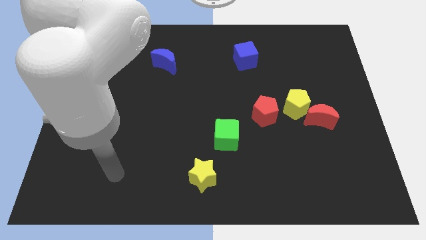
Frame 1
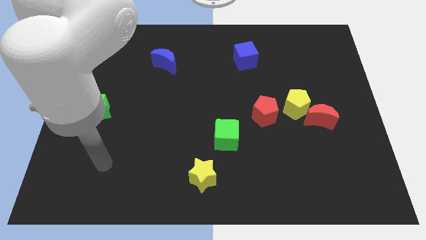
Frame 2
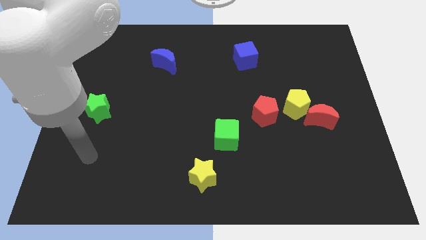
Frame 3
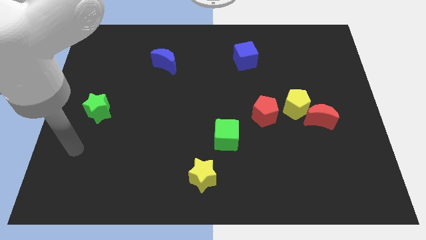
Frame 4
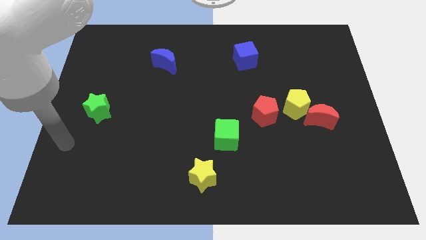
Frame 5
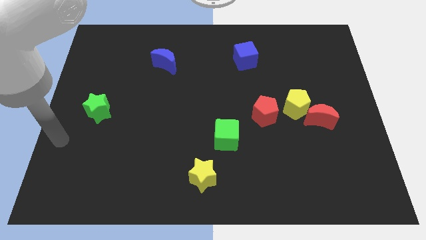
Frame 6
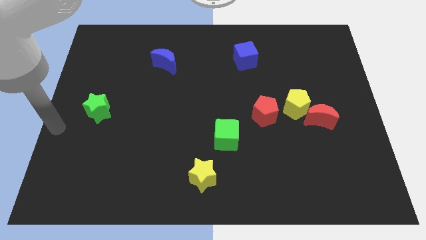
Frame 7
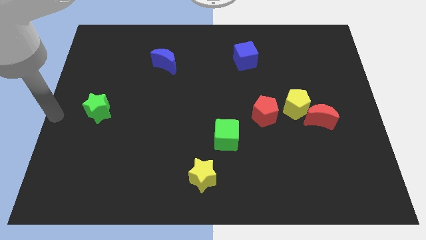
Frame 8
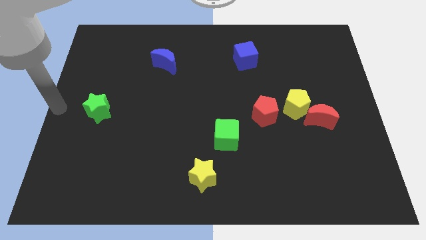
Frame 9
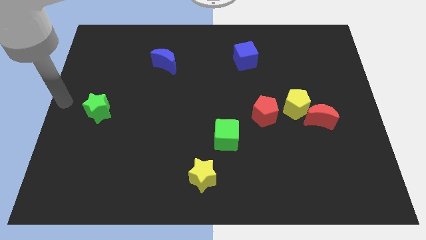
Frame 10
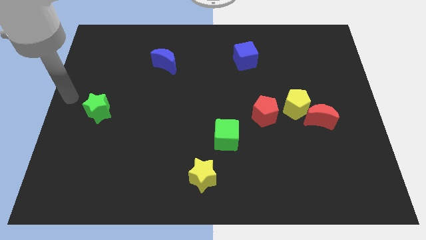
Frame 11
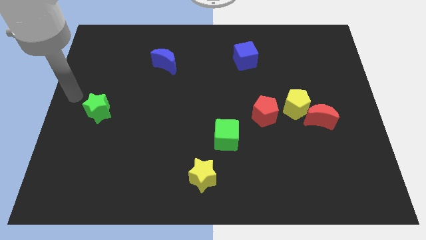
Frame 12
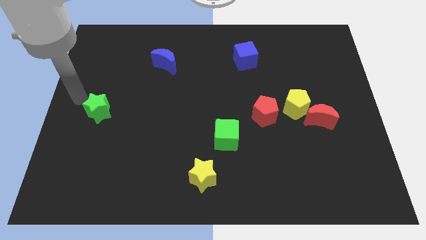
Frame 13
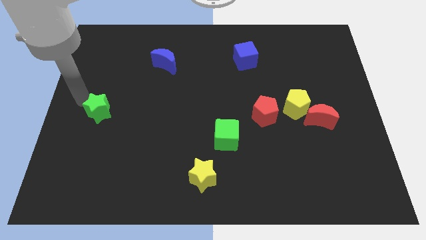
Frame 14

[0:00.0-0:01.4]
put your arm above the green star

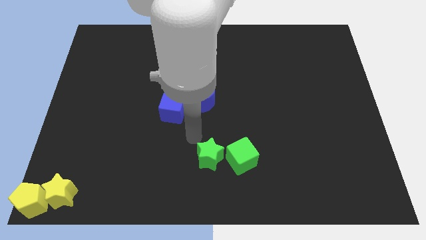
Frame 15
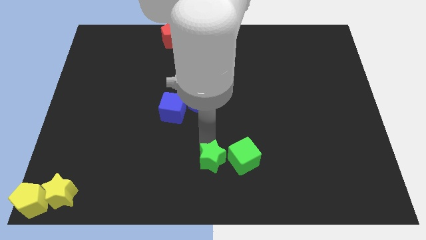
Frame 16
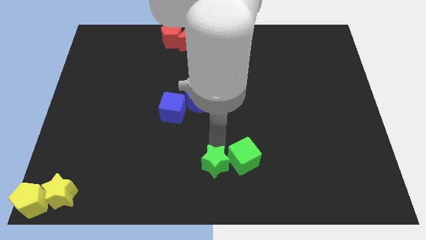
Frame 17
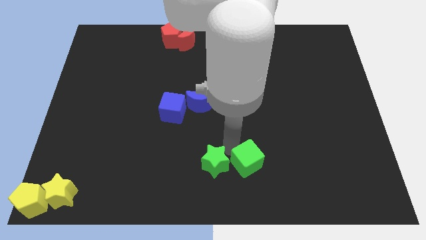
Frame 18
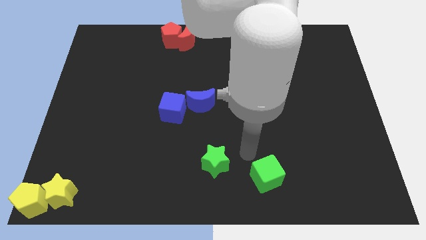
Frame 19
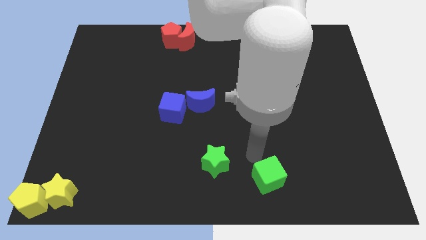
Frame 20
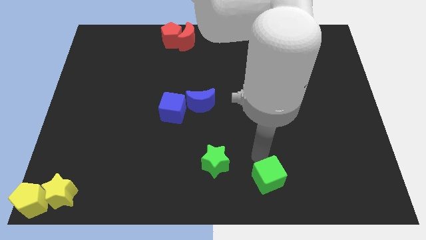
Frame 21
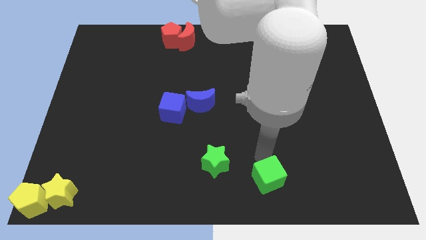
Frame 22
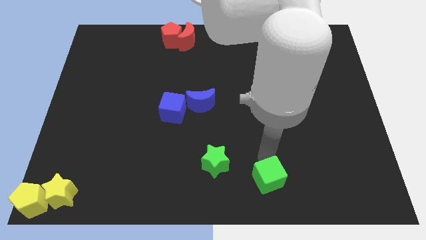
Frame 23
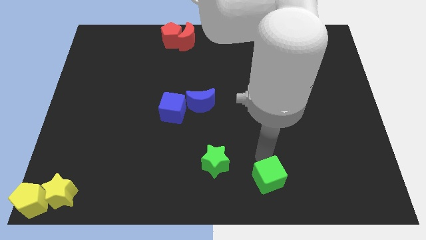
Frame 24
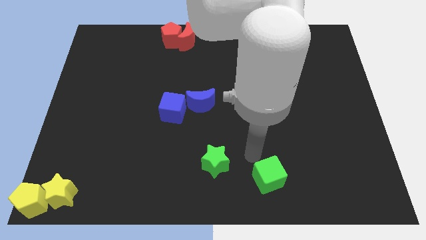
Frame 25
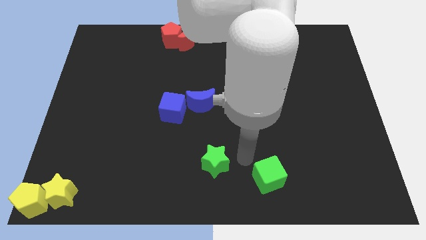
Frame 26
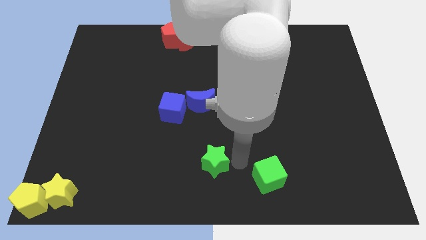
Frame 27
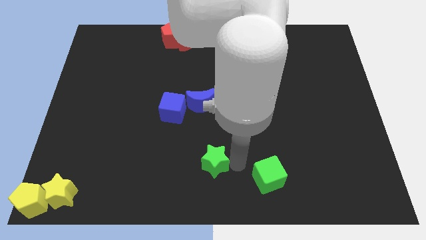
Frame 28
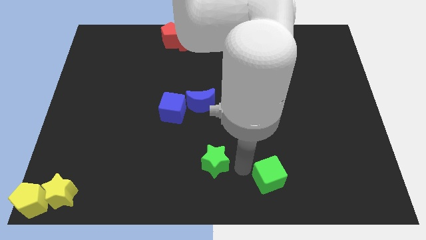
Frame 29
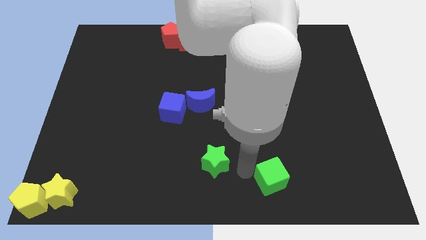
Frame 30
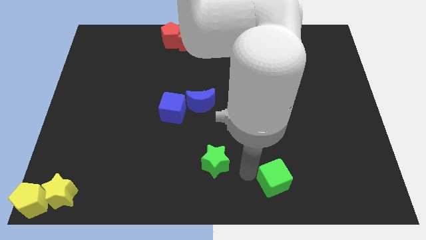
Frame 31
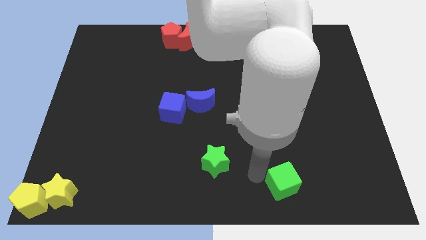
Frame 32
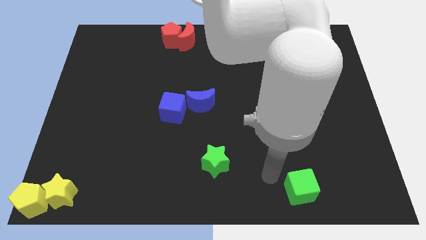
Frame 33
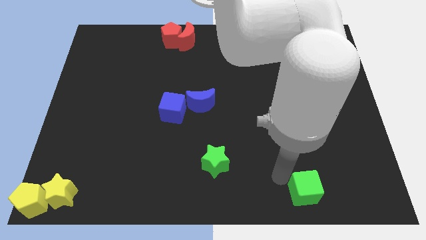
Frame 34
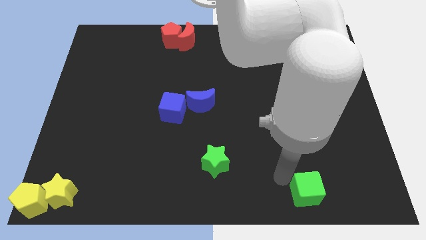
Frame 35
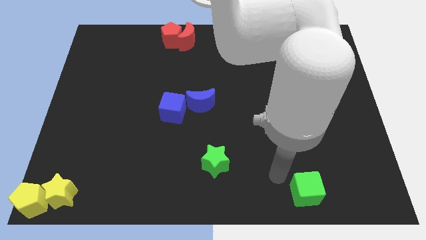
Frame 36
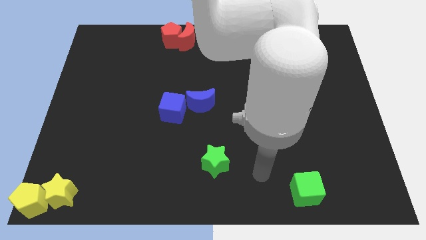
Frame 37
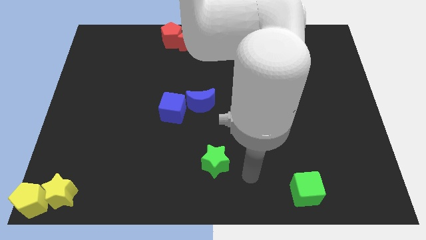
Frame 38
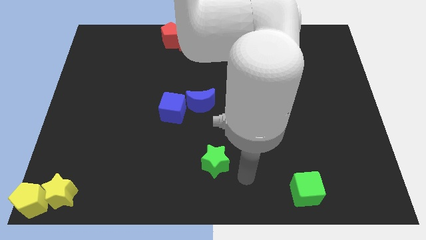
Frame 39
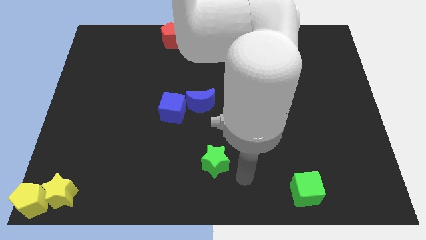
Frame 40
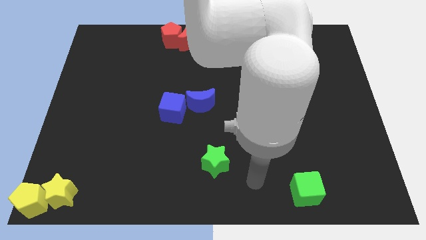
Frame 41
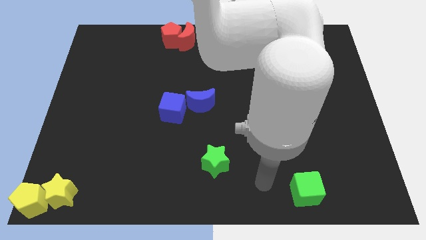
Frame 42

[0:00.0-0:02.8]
separate the green cube towards bottom right side

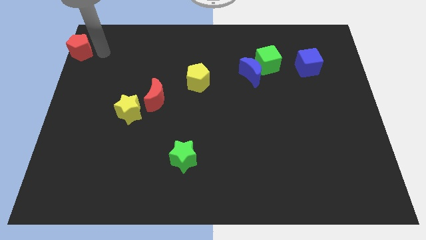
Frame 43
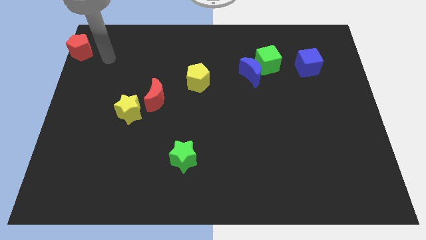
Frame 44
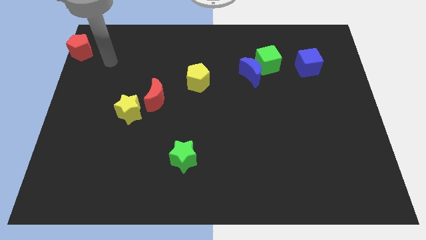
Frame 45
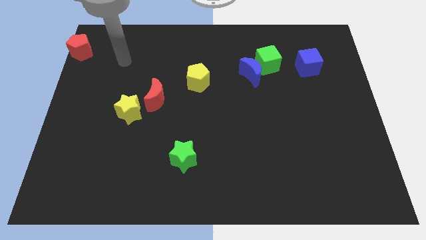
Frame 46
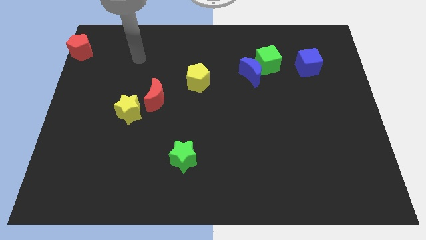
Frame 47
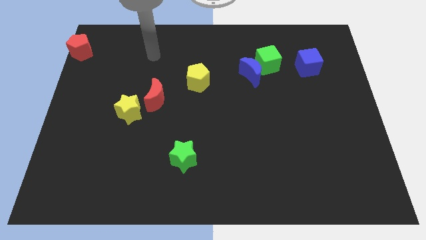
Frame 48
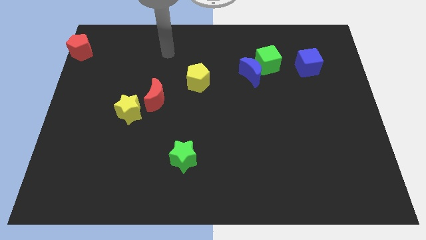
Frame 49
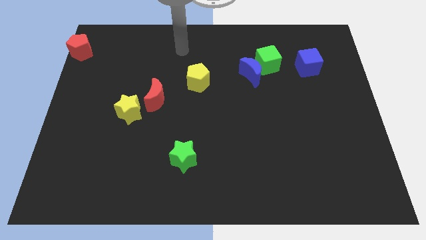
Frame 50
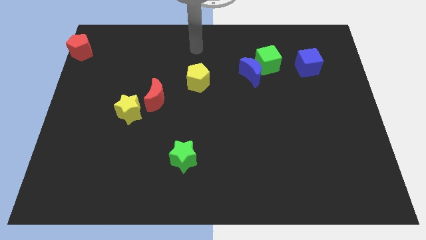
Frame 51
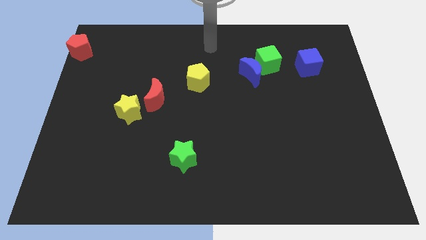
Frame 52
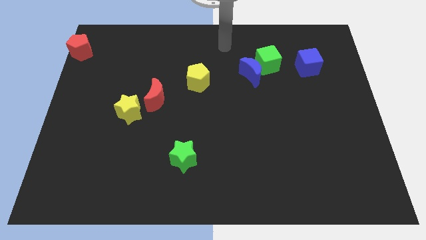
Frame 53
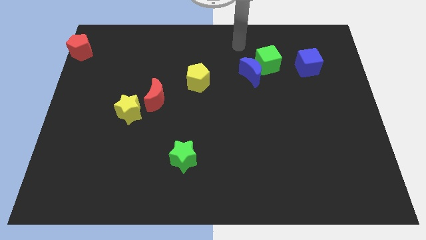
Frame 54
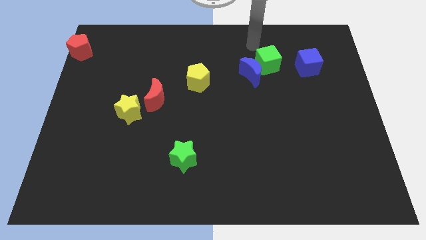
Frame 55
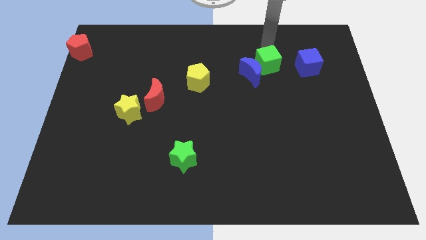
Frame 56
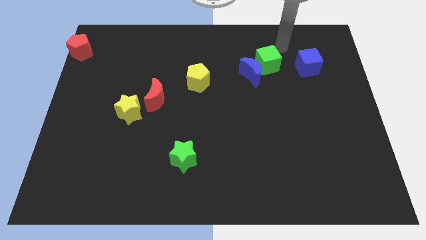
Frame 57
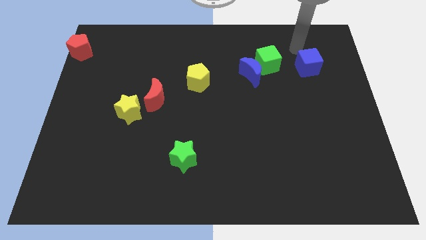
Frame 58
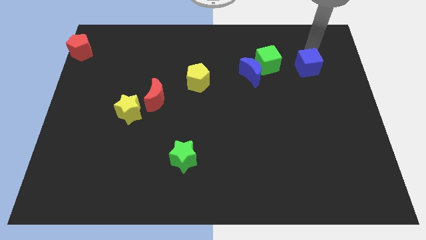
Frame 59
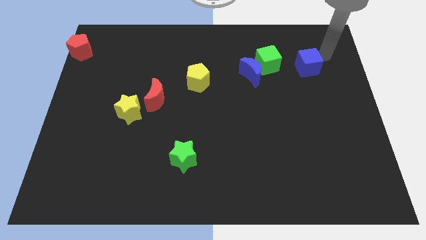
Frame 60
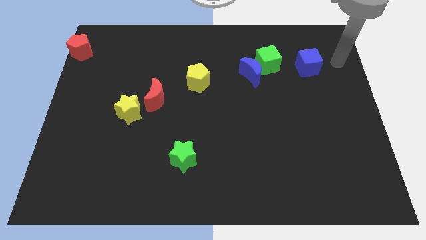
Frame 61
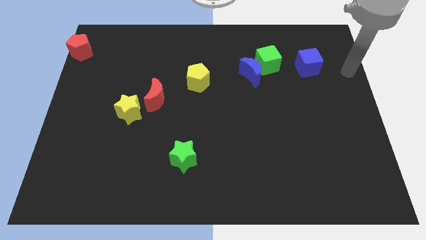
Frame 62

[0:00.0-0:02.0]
push your arm at the right side of the blue cube

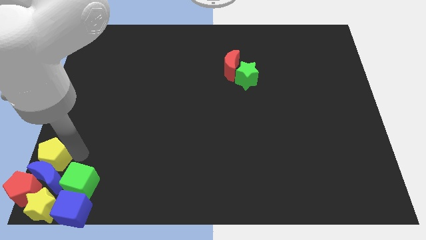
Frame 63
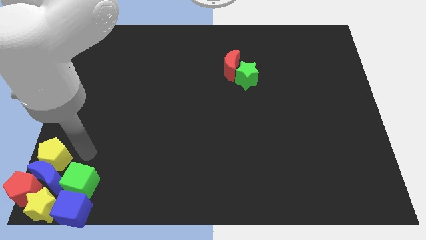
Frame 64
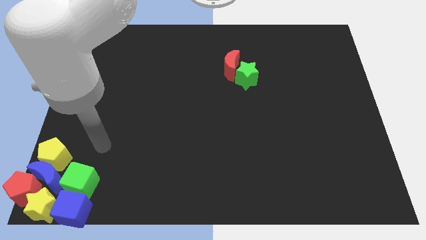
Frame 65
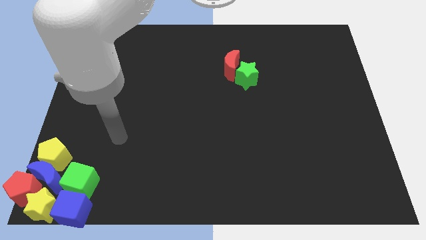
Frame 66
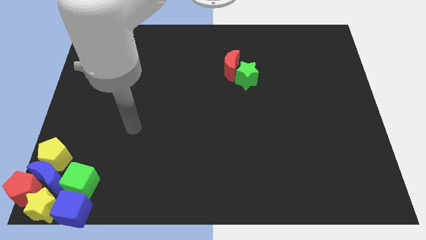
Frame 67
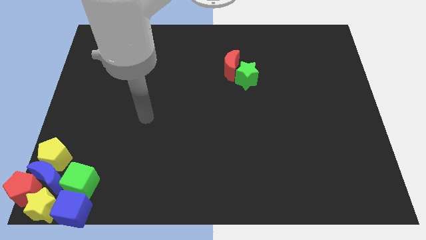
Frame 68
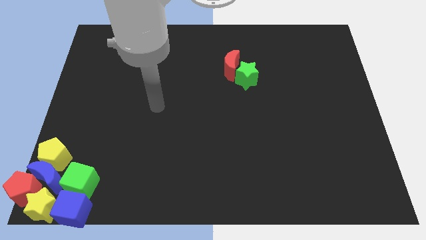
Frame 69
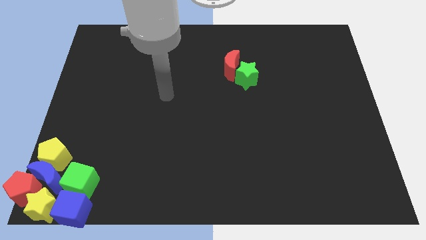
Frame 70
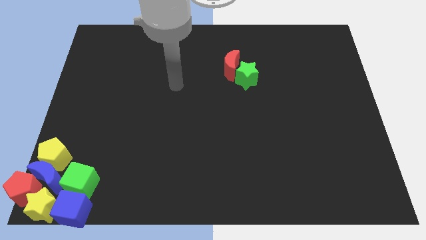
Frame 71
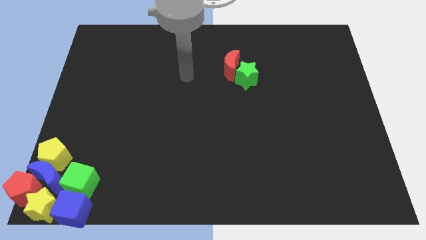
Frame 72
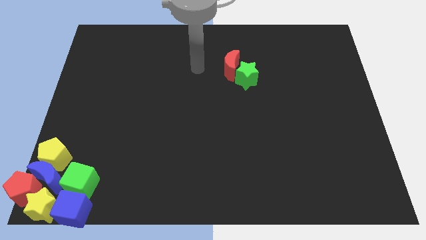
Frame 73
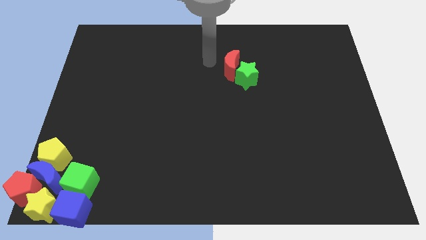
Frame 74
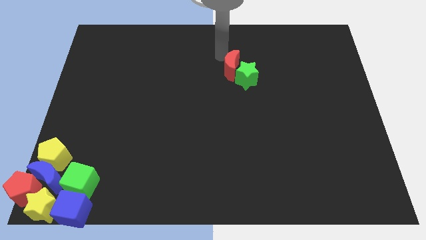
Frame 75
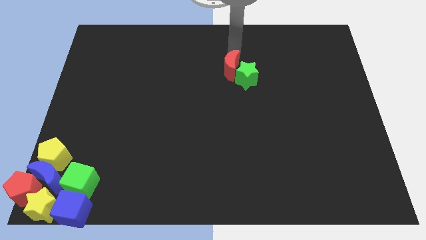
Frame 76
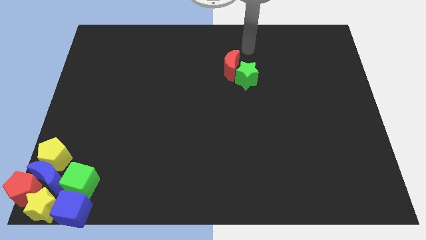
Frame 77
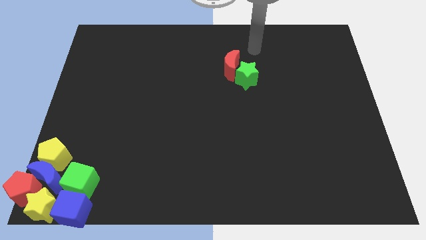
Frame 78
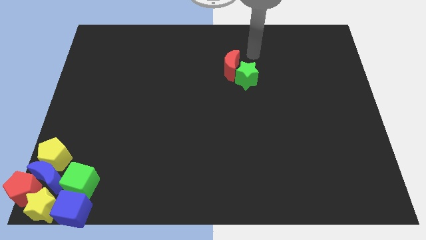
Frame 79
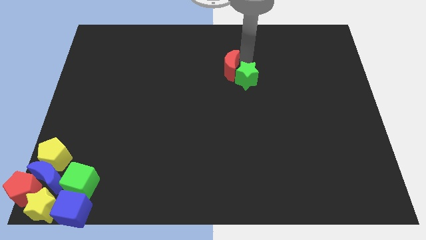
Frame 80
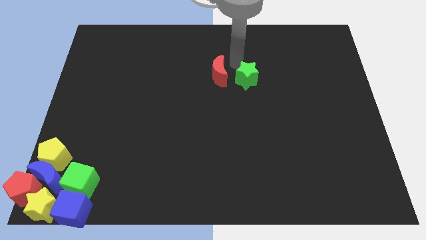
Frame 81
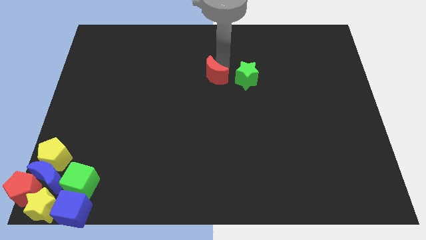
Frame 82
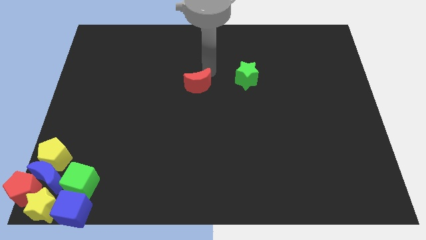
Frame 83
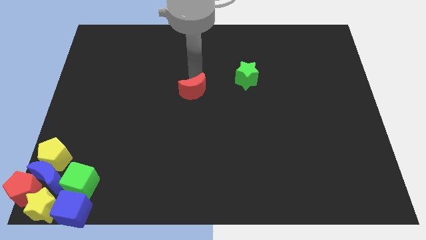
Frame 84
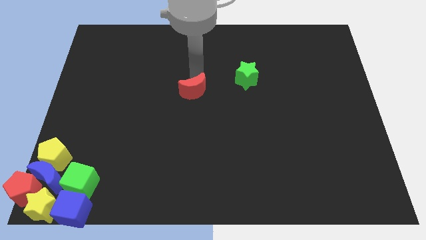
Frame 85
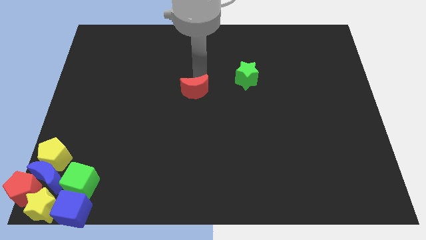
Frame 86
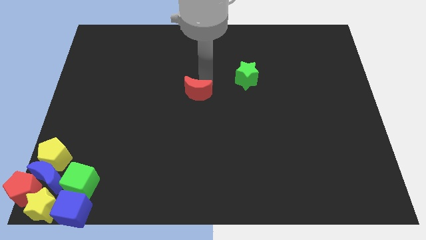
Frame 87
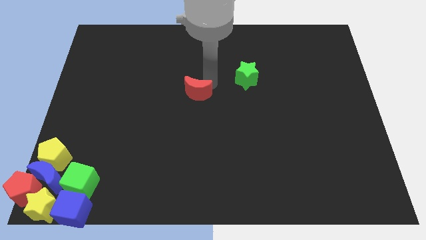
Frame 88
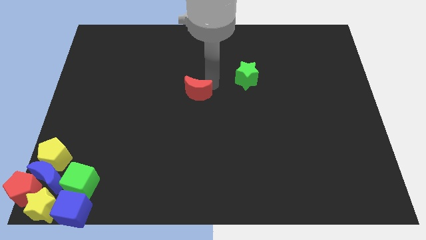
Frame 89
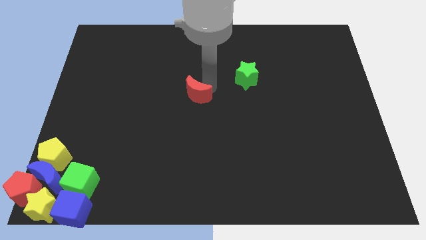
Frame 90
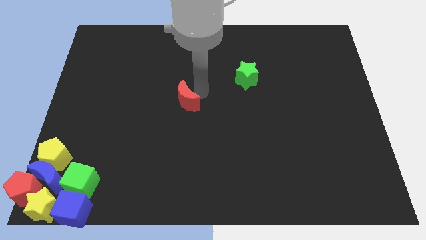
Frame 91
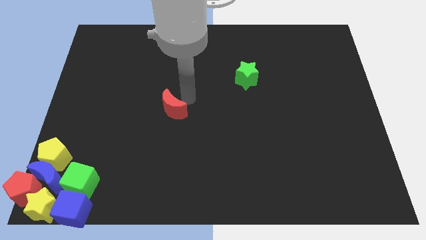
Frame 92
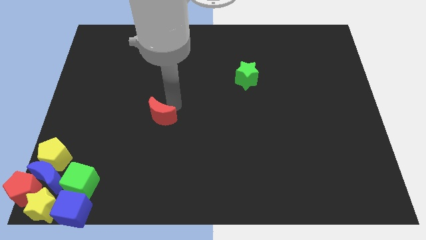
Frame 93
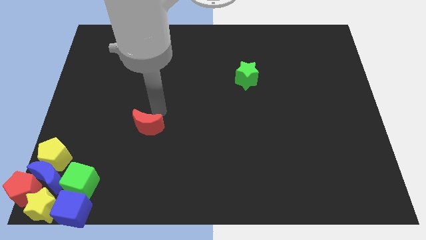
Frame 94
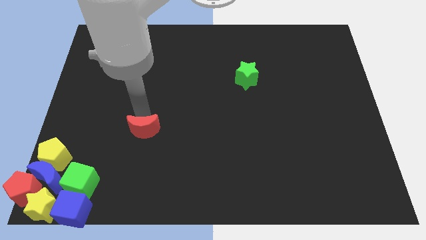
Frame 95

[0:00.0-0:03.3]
separate the red crescent from the green star
